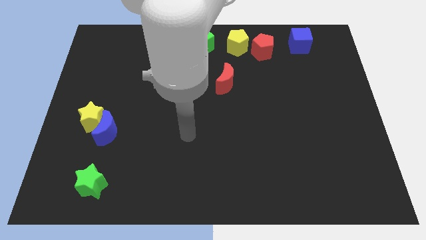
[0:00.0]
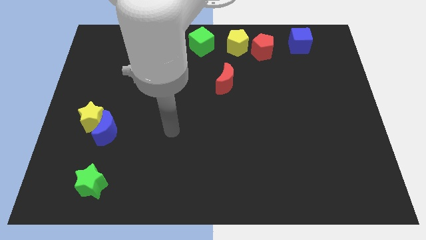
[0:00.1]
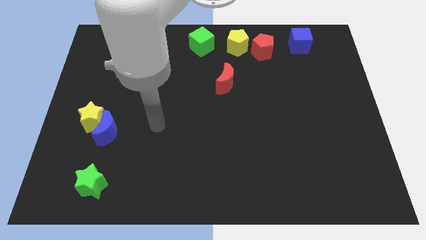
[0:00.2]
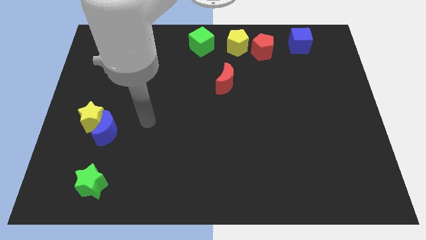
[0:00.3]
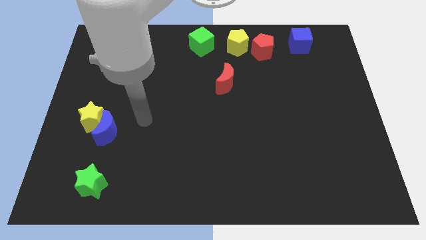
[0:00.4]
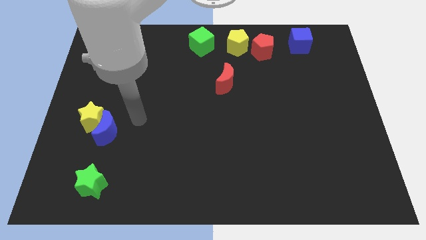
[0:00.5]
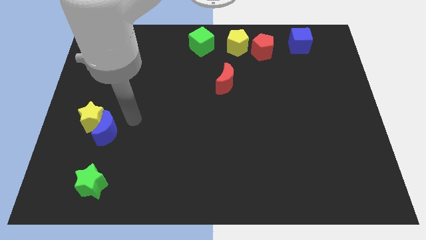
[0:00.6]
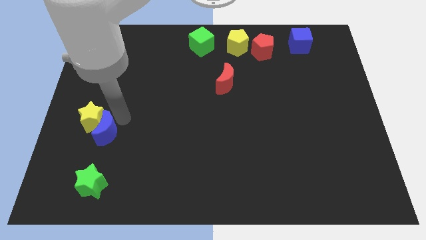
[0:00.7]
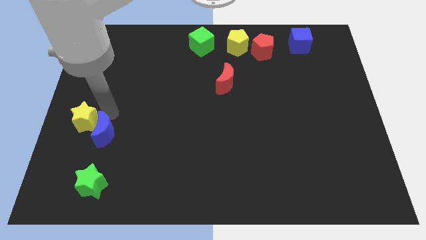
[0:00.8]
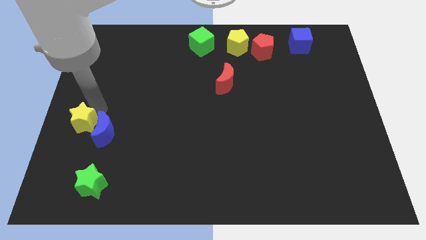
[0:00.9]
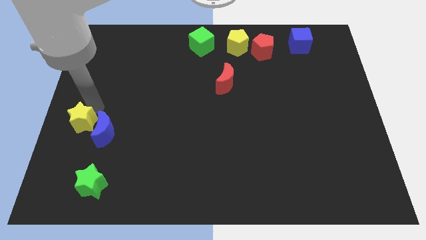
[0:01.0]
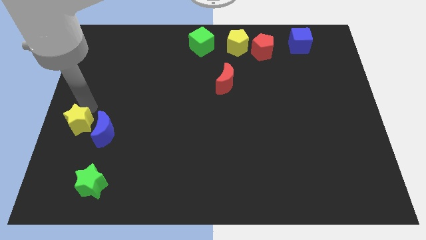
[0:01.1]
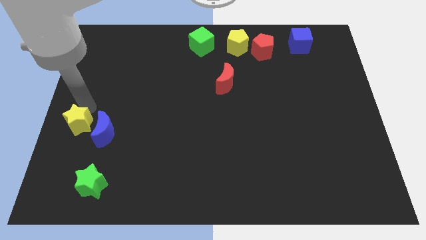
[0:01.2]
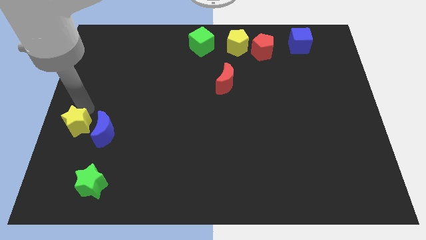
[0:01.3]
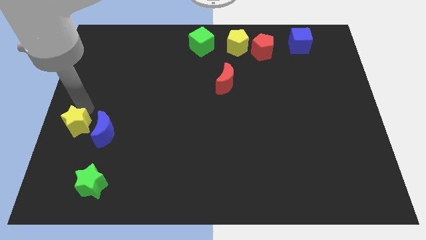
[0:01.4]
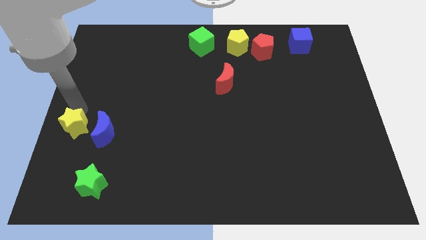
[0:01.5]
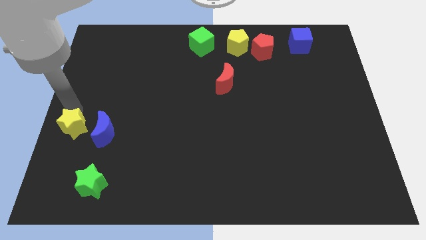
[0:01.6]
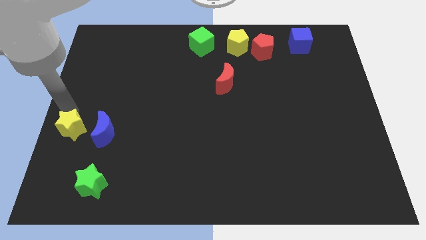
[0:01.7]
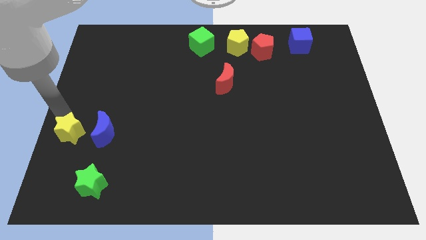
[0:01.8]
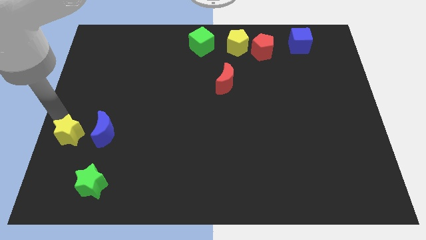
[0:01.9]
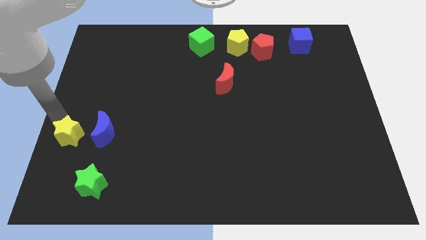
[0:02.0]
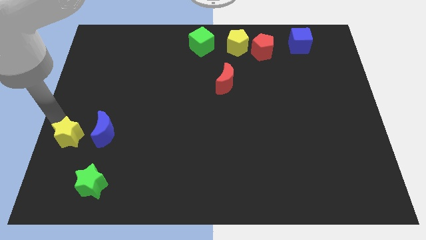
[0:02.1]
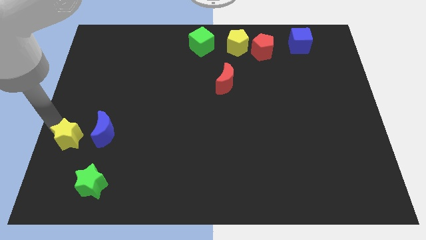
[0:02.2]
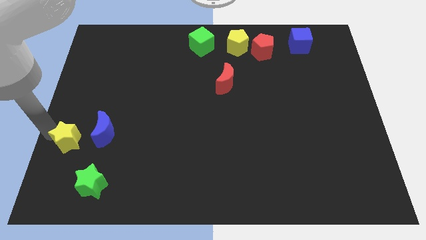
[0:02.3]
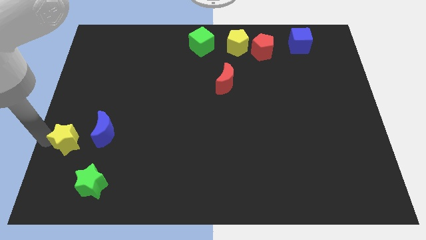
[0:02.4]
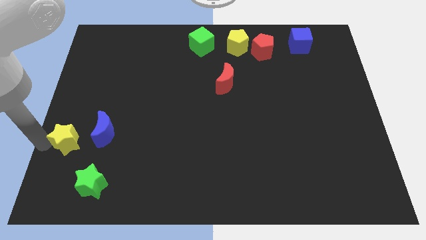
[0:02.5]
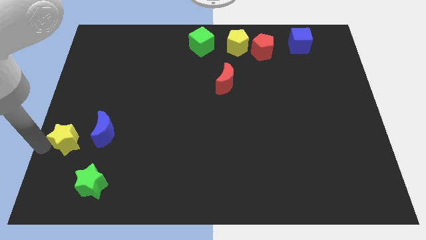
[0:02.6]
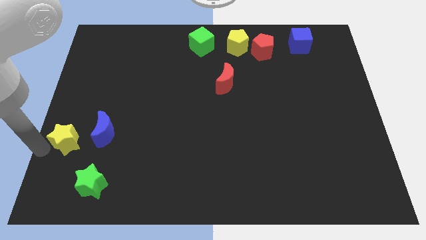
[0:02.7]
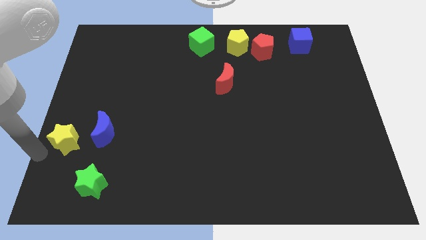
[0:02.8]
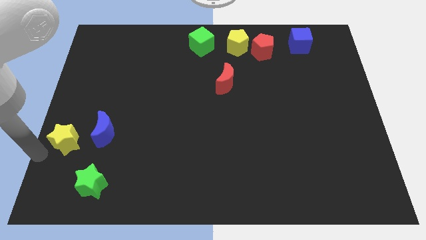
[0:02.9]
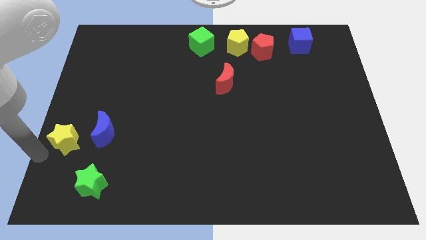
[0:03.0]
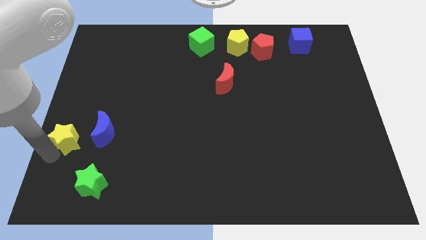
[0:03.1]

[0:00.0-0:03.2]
push the green star downwards slightly

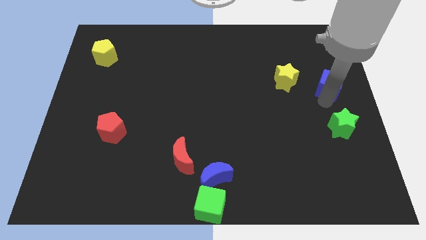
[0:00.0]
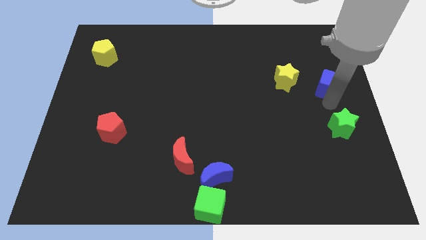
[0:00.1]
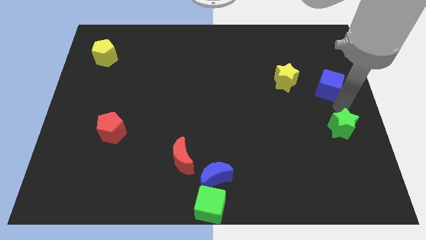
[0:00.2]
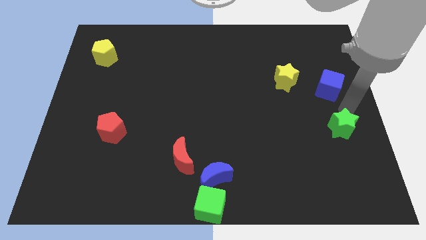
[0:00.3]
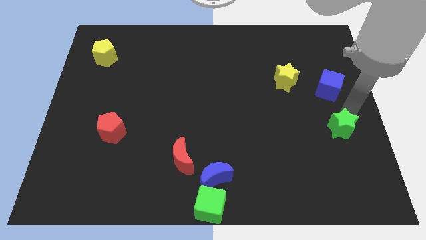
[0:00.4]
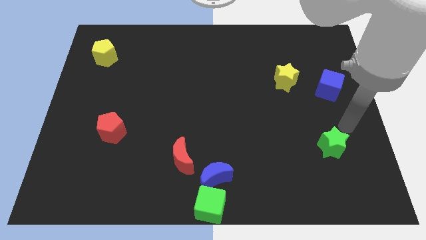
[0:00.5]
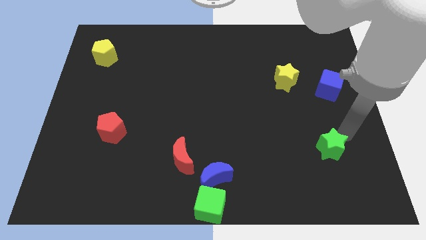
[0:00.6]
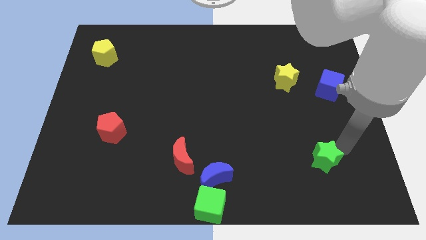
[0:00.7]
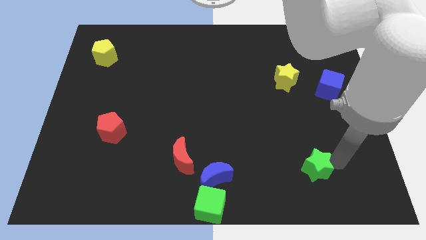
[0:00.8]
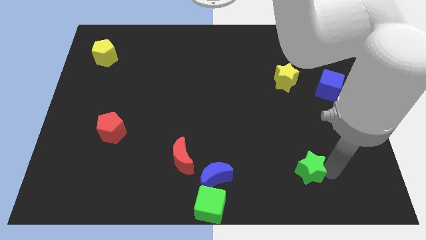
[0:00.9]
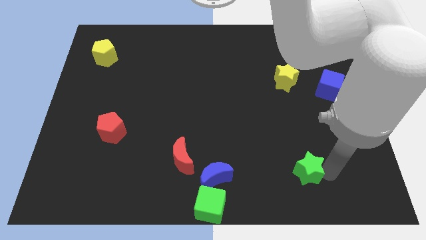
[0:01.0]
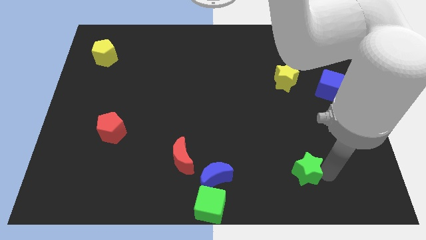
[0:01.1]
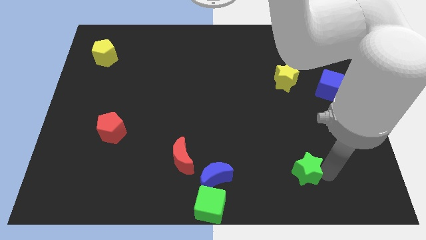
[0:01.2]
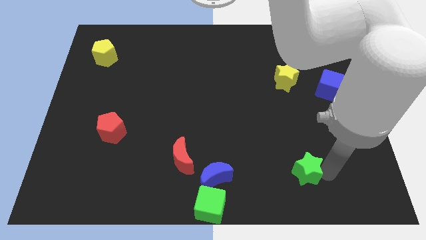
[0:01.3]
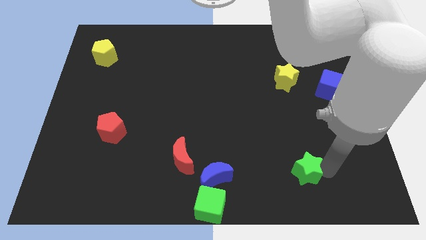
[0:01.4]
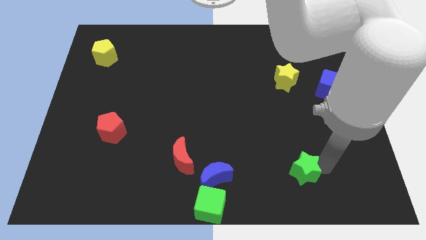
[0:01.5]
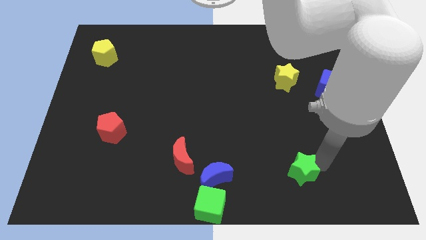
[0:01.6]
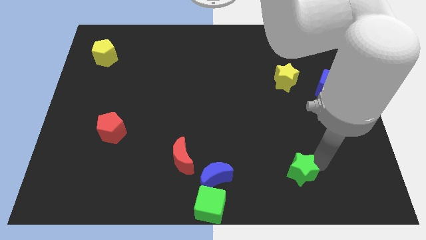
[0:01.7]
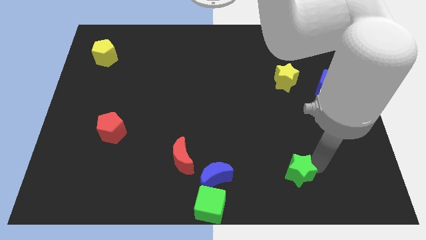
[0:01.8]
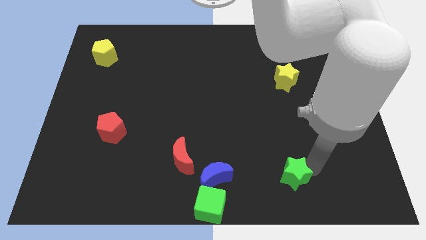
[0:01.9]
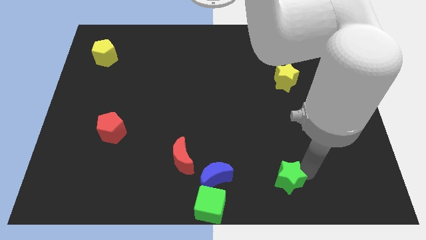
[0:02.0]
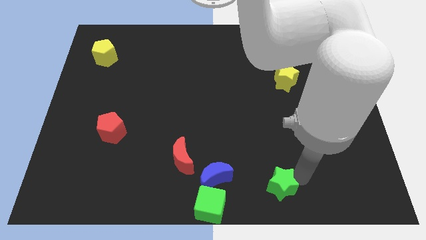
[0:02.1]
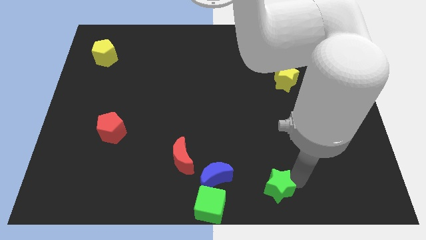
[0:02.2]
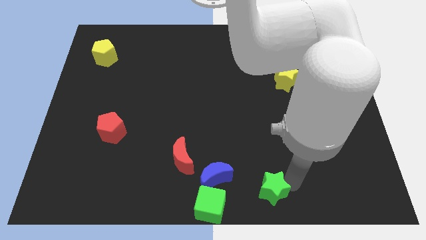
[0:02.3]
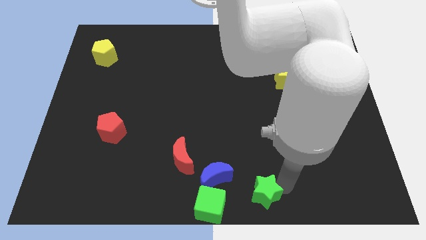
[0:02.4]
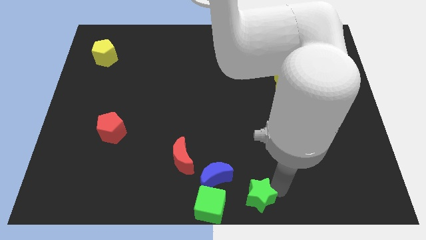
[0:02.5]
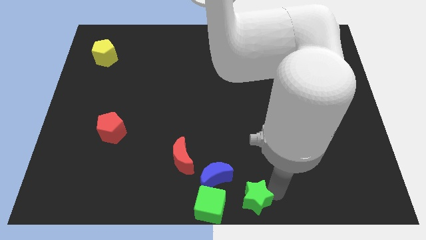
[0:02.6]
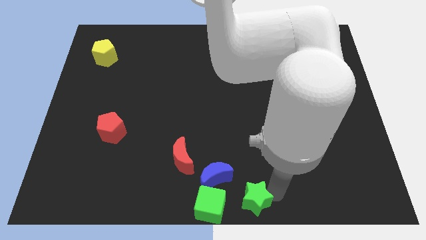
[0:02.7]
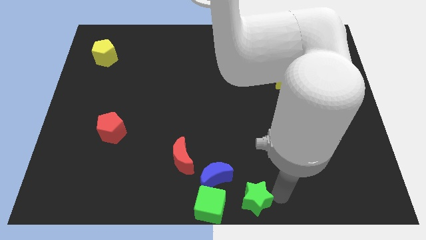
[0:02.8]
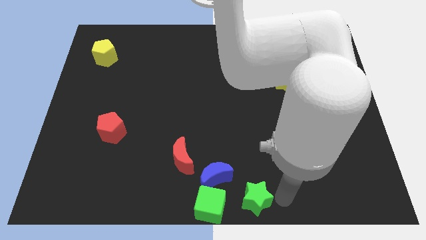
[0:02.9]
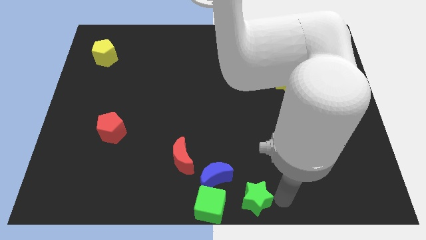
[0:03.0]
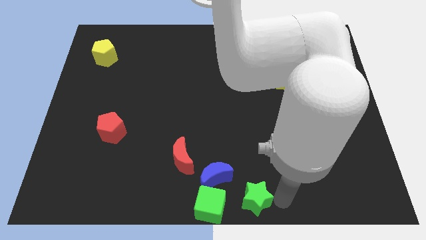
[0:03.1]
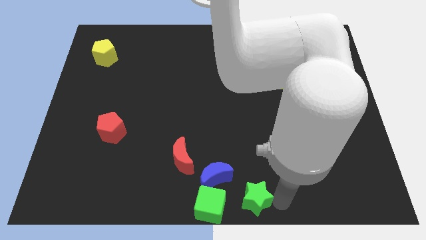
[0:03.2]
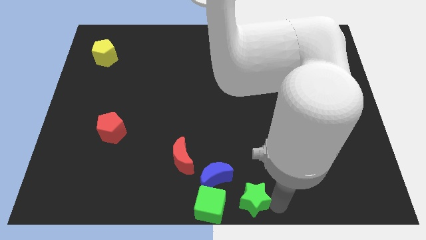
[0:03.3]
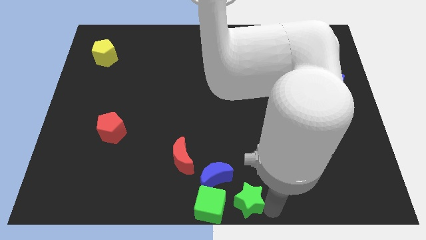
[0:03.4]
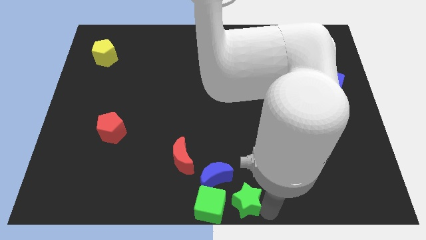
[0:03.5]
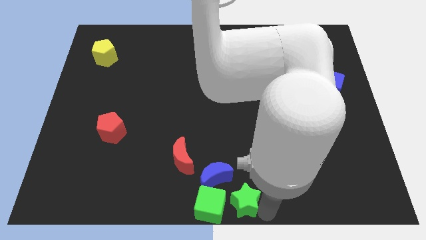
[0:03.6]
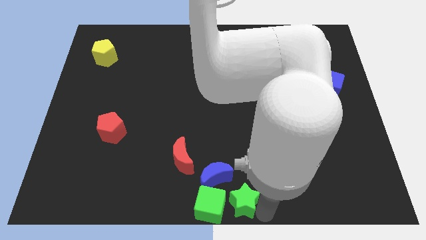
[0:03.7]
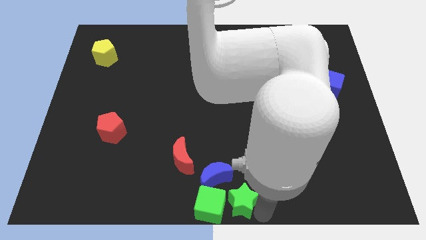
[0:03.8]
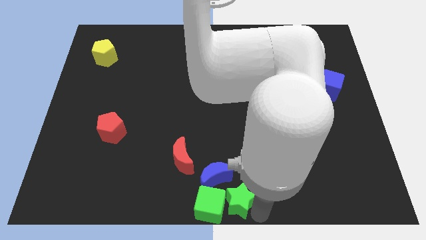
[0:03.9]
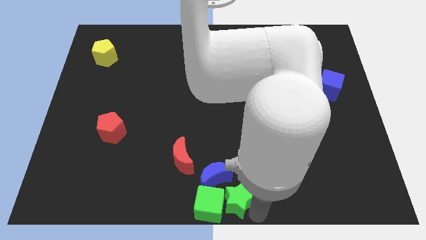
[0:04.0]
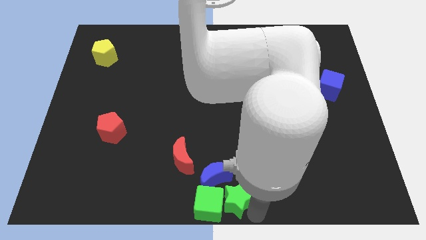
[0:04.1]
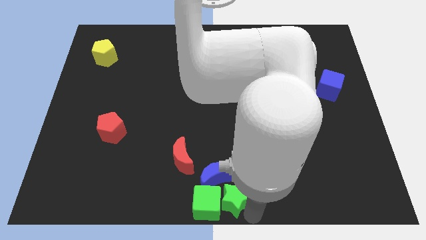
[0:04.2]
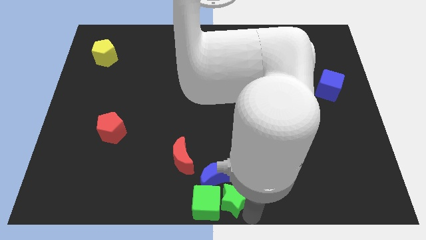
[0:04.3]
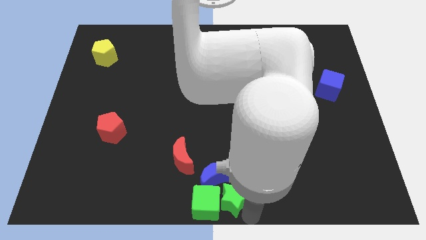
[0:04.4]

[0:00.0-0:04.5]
push green star into the green cube

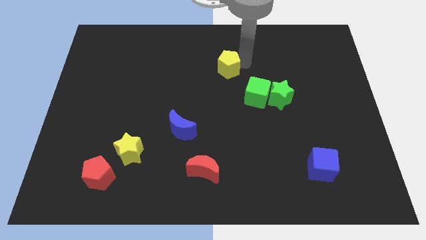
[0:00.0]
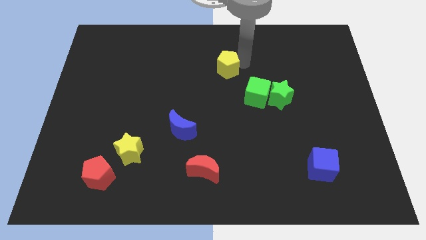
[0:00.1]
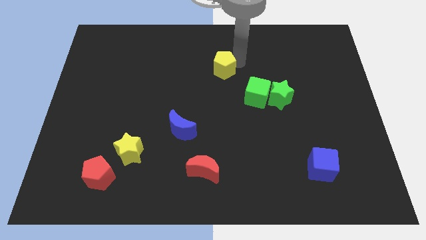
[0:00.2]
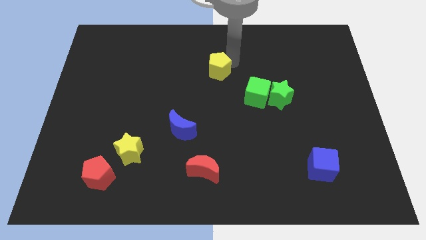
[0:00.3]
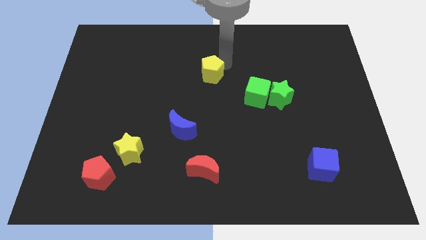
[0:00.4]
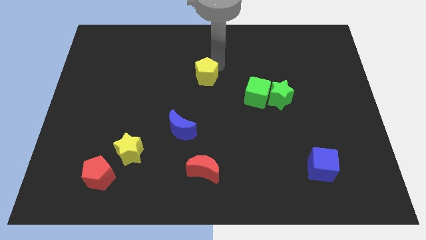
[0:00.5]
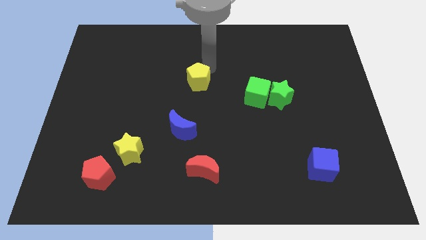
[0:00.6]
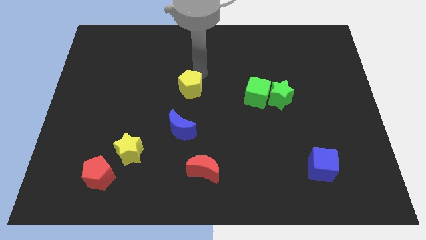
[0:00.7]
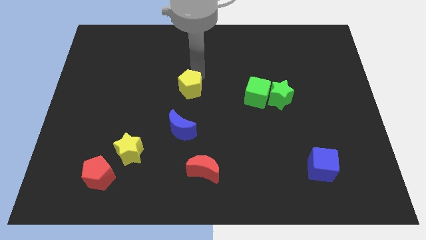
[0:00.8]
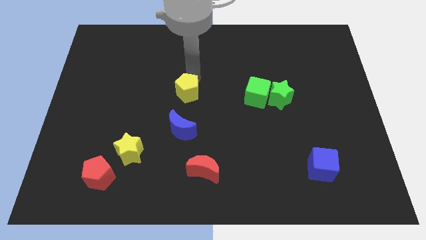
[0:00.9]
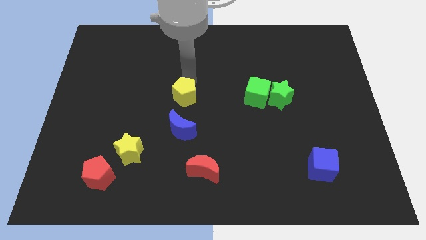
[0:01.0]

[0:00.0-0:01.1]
place yellow pentagon at center

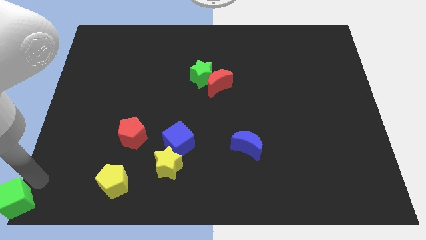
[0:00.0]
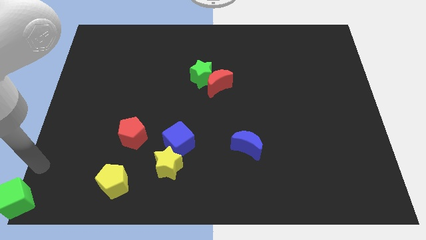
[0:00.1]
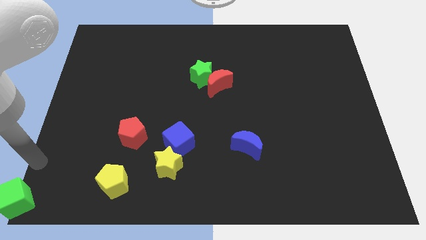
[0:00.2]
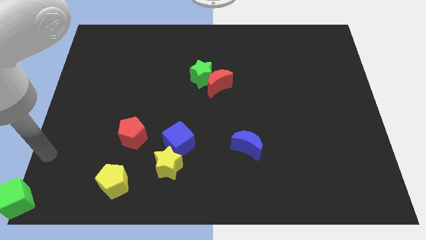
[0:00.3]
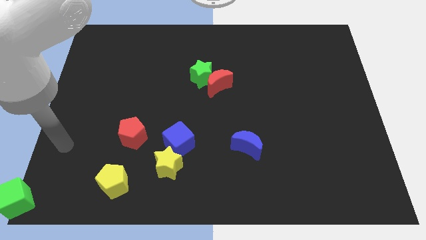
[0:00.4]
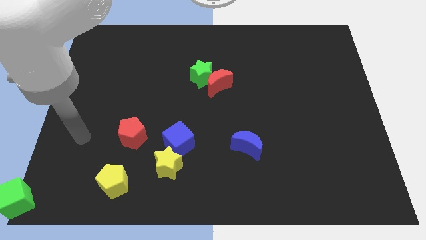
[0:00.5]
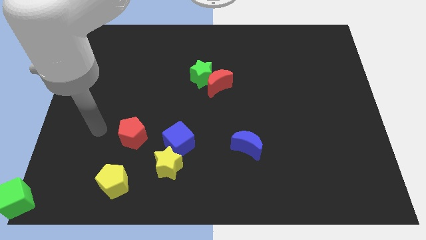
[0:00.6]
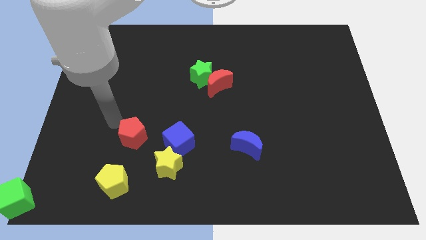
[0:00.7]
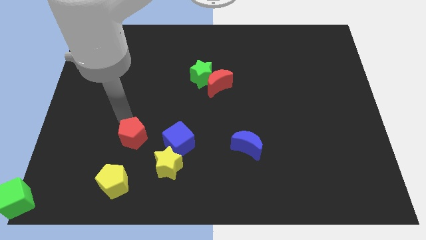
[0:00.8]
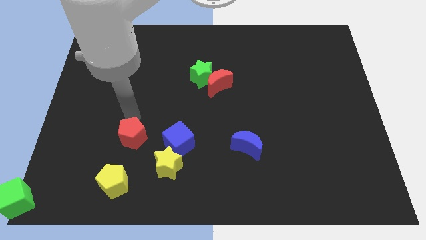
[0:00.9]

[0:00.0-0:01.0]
place the arm above the red pentagon
